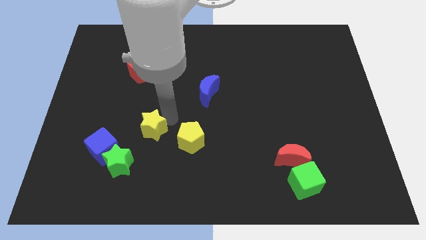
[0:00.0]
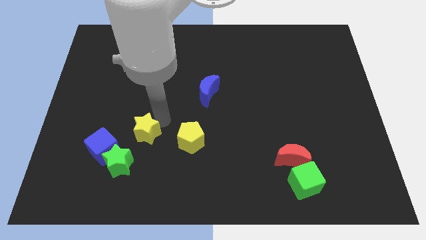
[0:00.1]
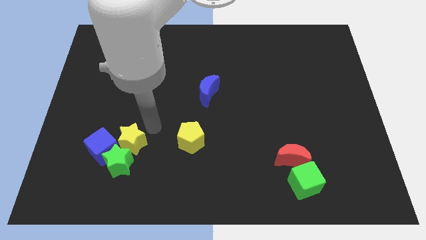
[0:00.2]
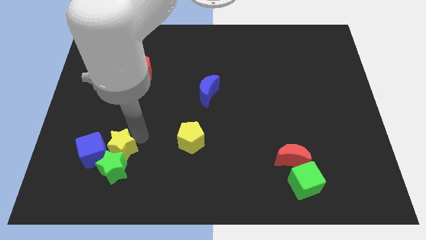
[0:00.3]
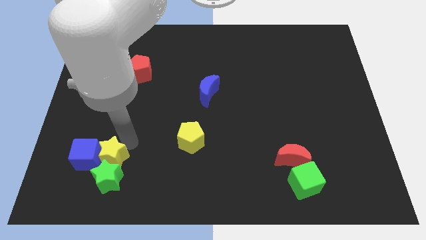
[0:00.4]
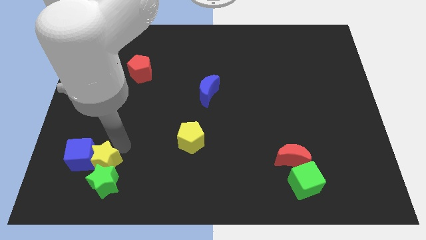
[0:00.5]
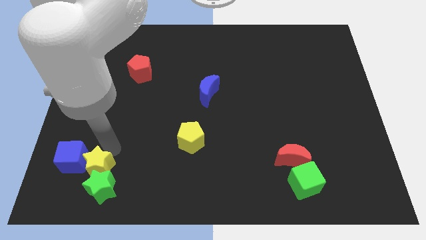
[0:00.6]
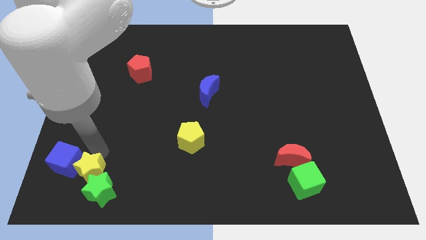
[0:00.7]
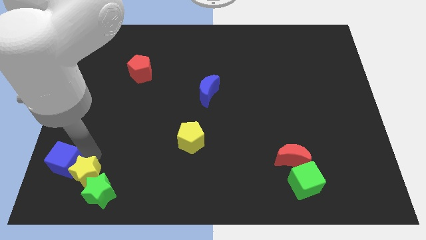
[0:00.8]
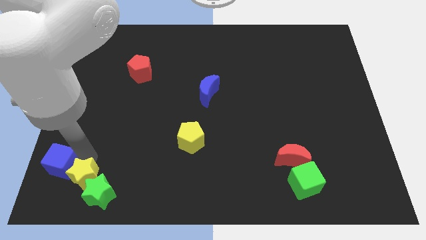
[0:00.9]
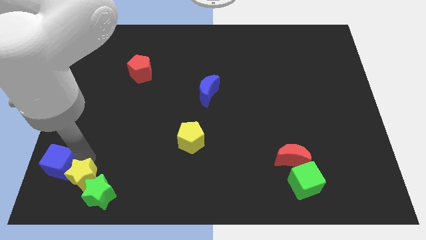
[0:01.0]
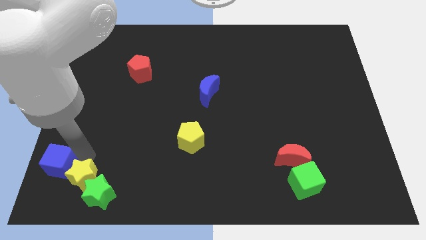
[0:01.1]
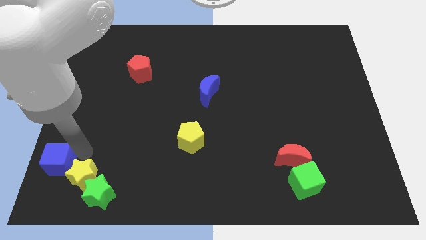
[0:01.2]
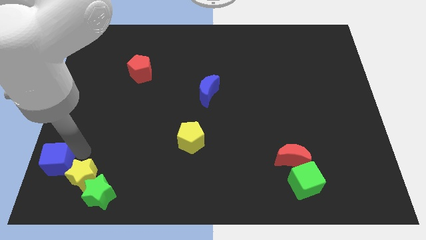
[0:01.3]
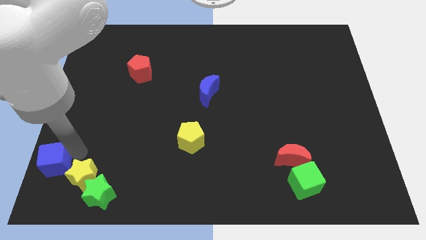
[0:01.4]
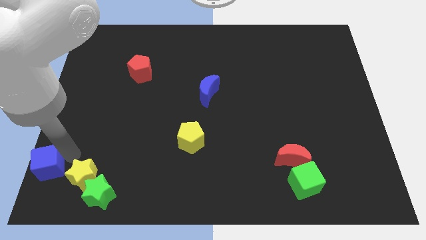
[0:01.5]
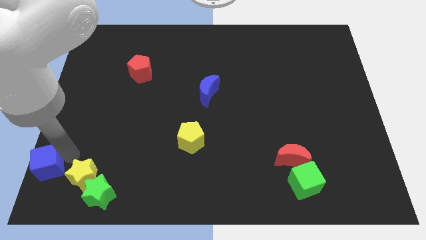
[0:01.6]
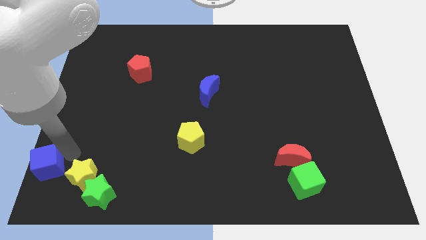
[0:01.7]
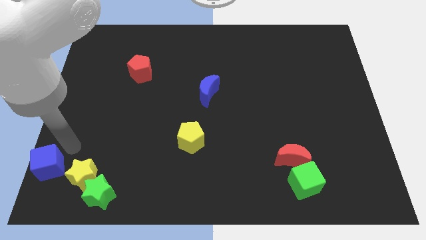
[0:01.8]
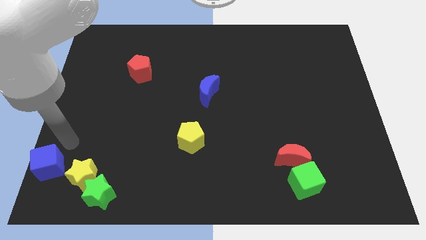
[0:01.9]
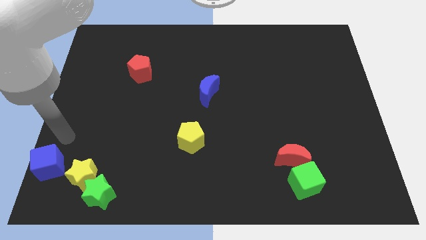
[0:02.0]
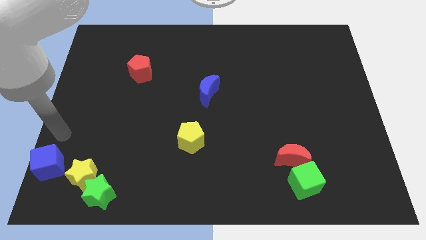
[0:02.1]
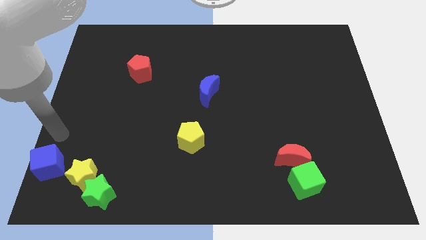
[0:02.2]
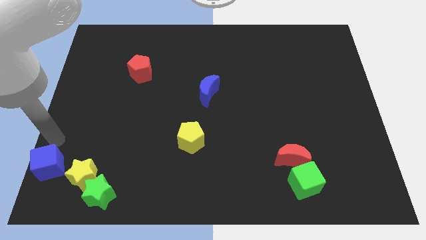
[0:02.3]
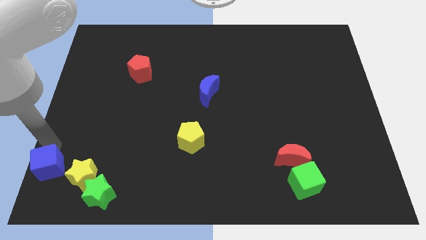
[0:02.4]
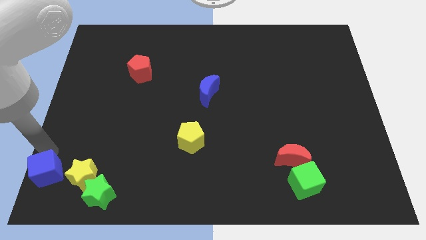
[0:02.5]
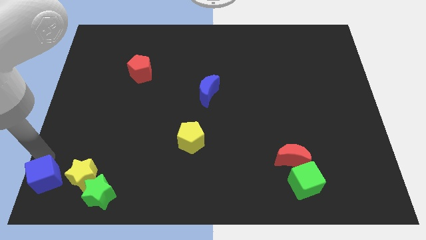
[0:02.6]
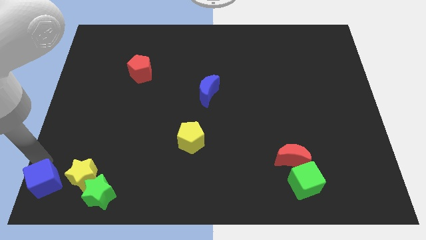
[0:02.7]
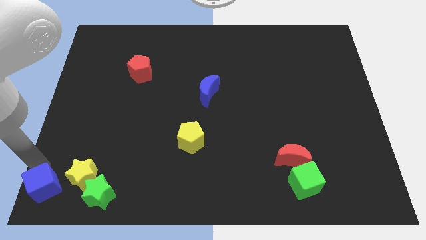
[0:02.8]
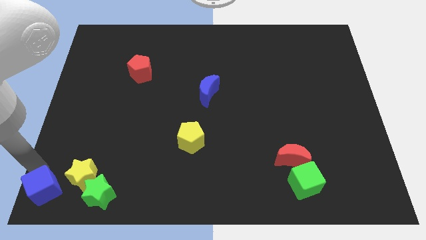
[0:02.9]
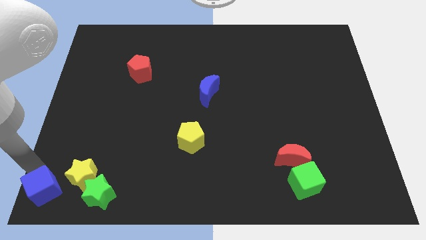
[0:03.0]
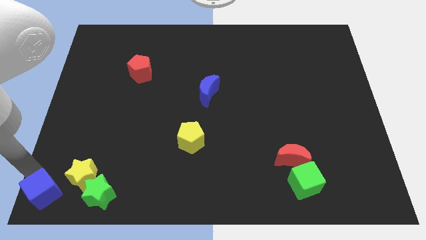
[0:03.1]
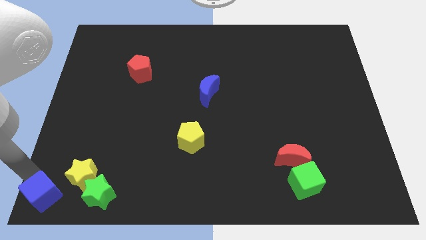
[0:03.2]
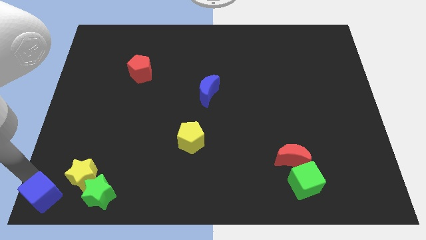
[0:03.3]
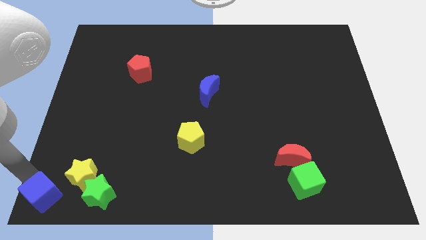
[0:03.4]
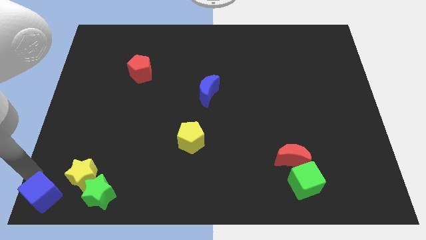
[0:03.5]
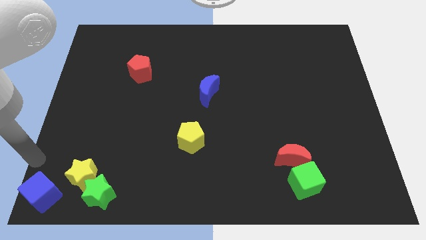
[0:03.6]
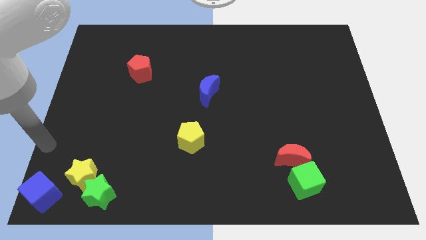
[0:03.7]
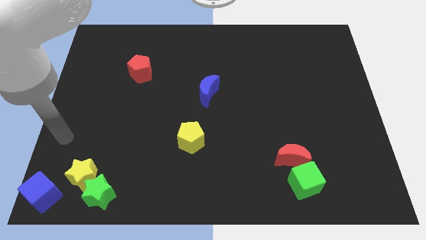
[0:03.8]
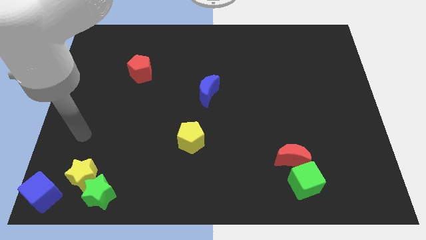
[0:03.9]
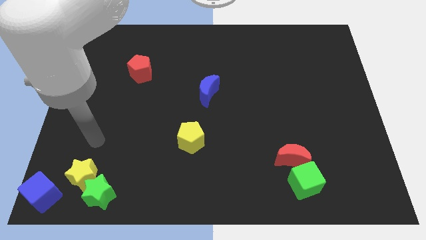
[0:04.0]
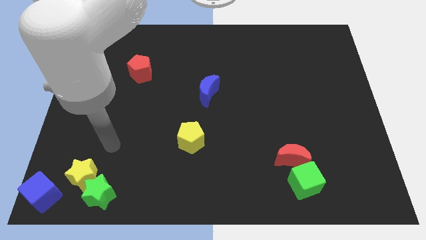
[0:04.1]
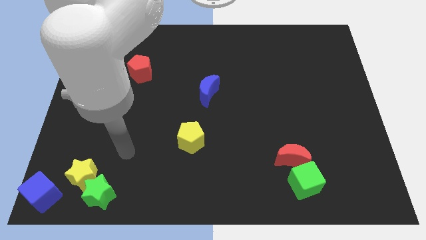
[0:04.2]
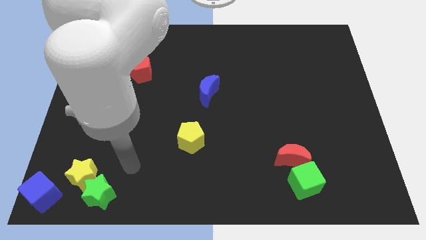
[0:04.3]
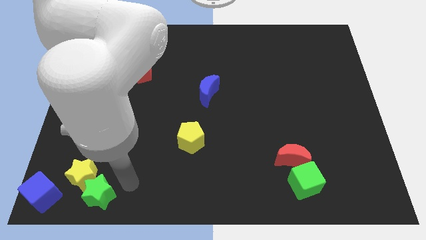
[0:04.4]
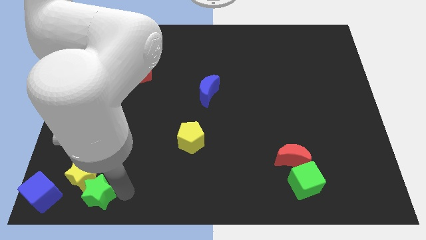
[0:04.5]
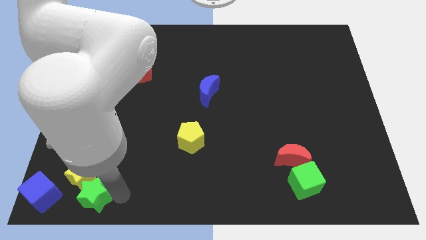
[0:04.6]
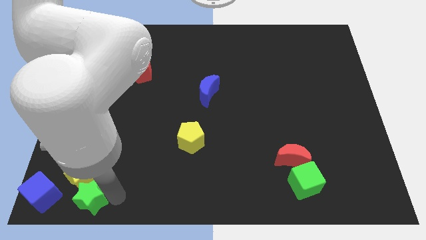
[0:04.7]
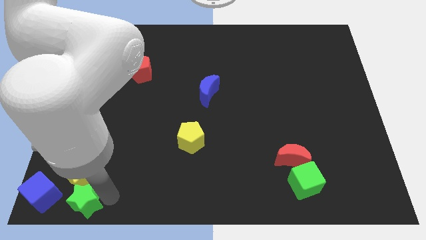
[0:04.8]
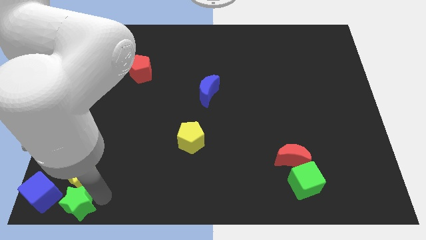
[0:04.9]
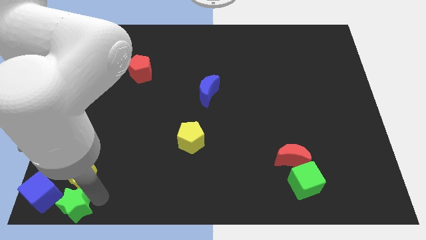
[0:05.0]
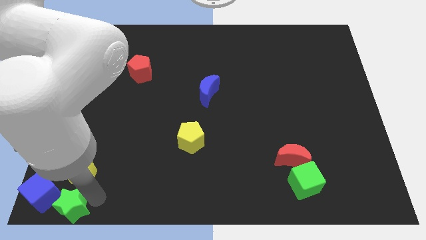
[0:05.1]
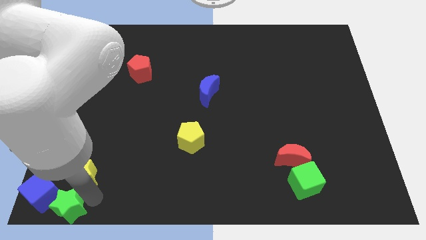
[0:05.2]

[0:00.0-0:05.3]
push the blue cube along with the yellow and green stars to the bottom left corner

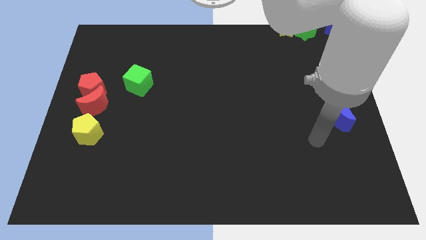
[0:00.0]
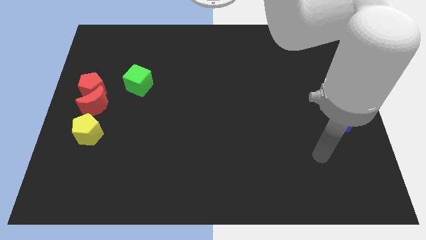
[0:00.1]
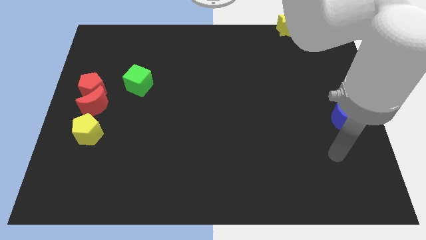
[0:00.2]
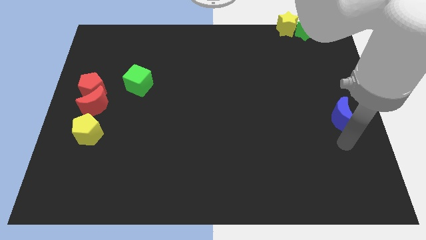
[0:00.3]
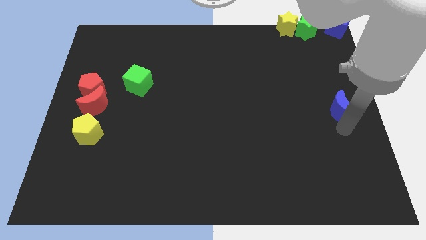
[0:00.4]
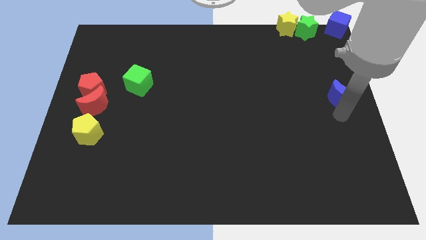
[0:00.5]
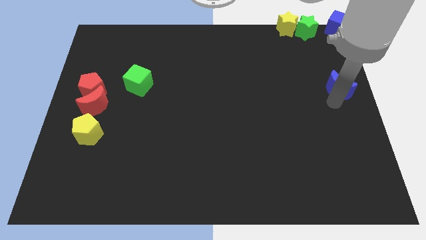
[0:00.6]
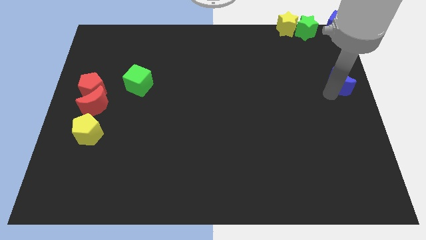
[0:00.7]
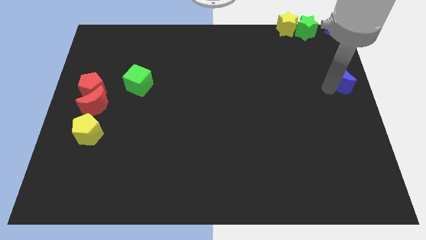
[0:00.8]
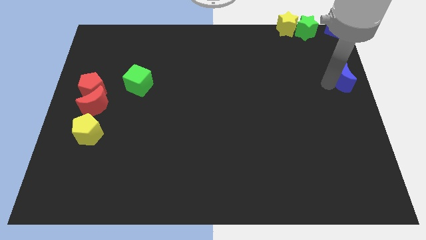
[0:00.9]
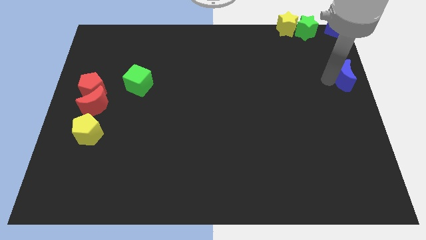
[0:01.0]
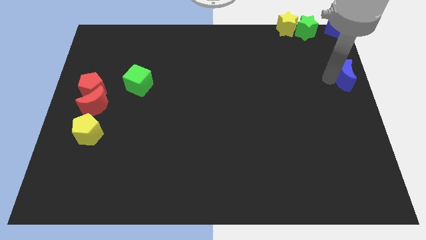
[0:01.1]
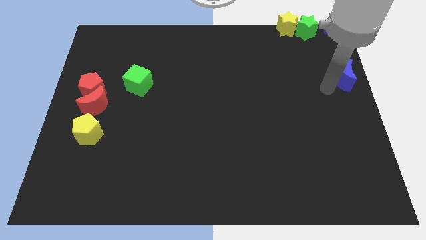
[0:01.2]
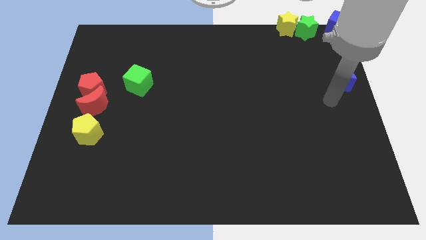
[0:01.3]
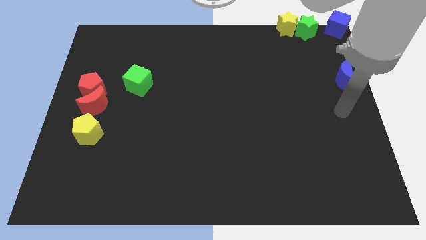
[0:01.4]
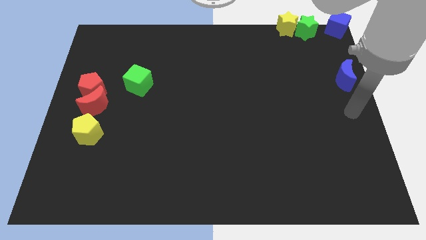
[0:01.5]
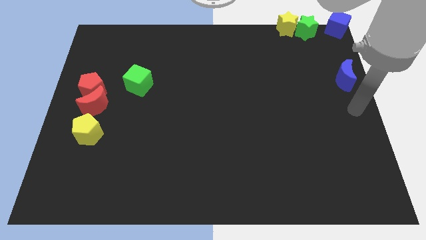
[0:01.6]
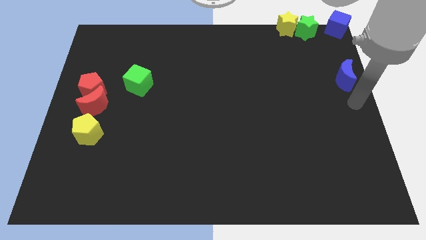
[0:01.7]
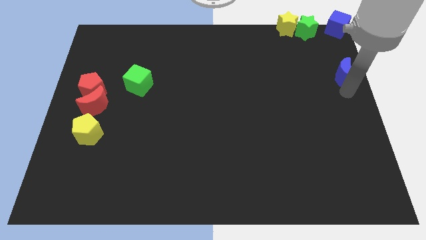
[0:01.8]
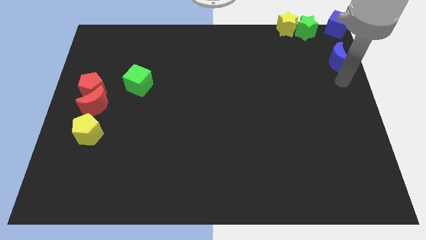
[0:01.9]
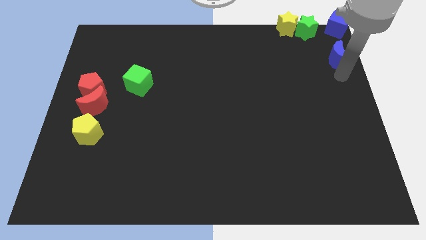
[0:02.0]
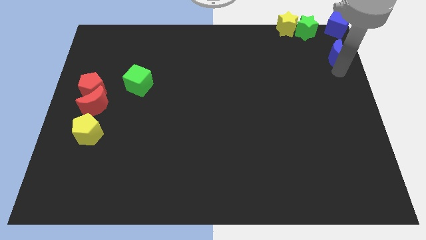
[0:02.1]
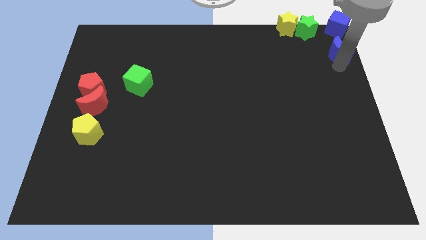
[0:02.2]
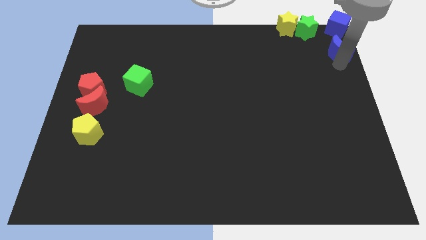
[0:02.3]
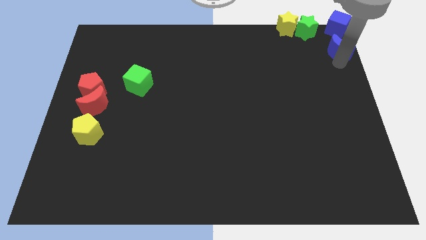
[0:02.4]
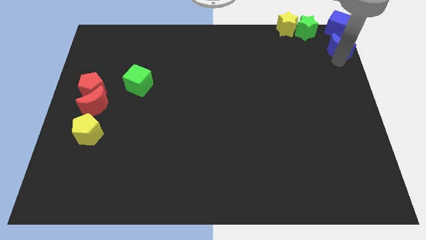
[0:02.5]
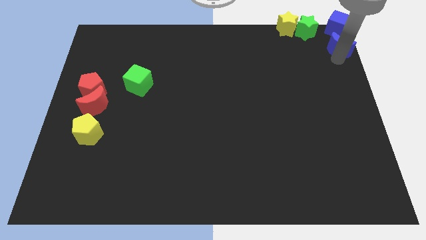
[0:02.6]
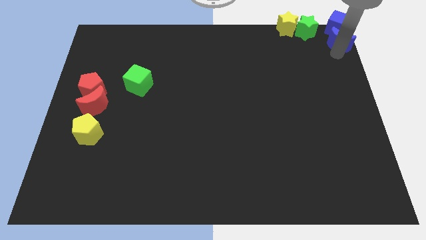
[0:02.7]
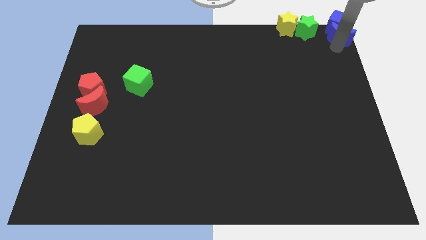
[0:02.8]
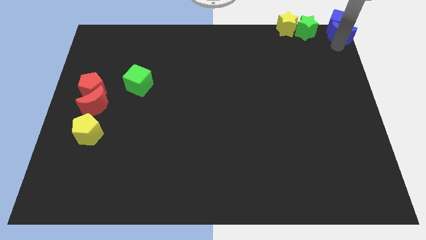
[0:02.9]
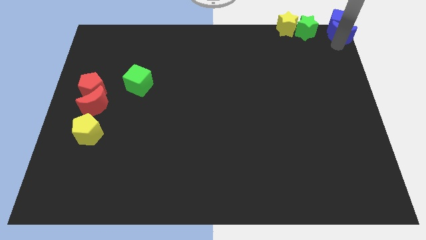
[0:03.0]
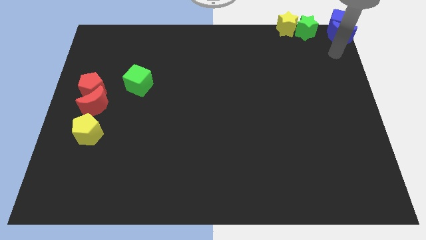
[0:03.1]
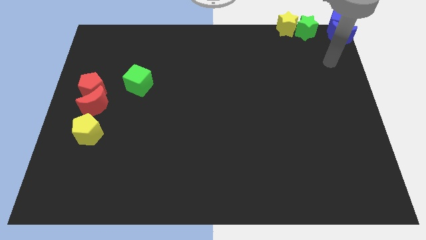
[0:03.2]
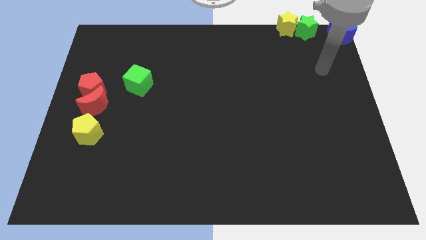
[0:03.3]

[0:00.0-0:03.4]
move the blue crescent in to the blue cube

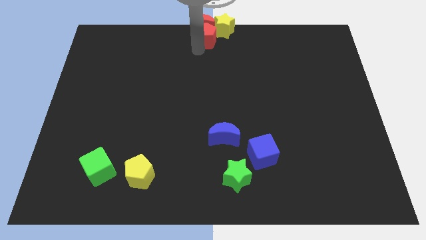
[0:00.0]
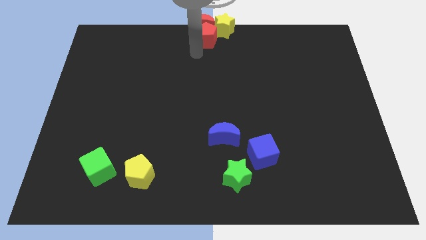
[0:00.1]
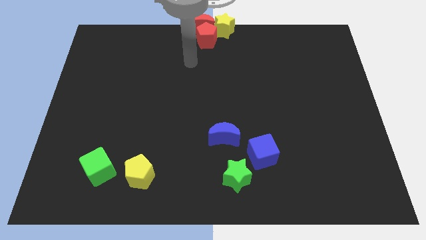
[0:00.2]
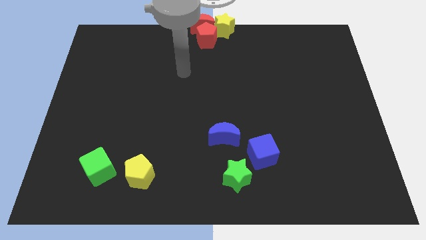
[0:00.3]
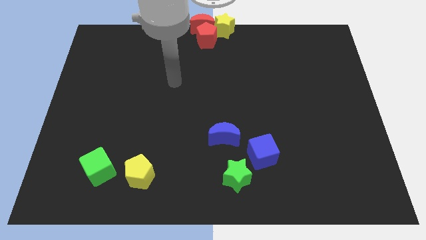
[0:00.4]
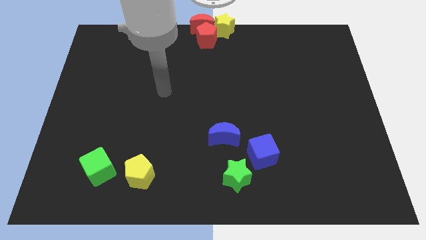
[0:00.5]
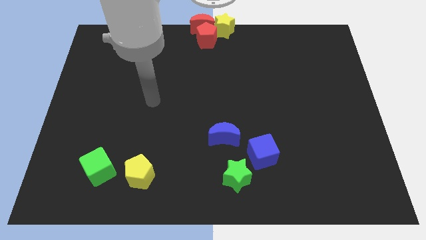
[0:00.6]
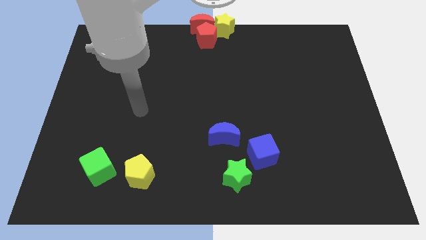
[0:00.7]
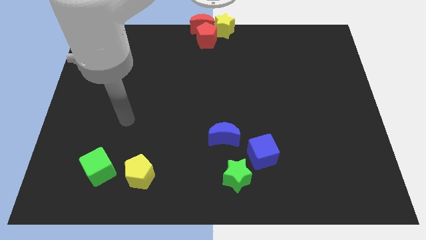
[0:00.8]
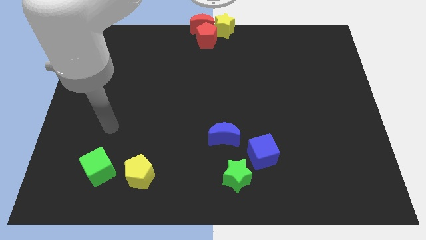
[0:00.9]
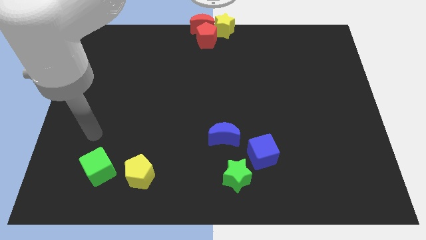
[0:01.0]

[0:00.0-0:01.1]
move the arm away from the red pentagon
